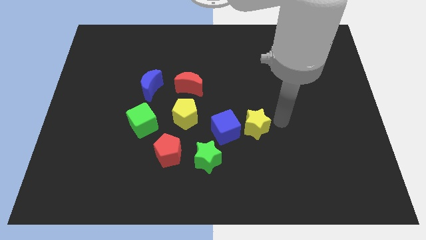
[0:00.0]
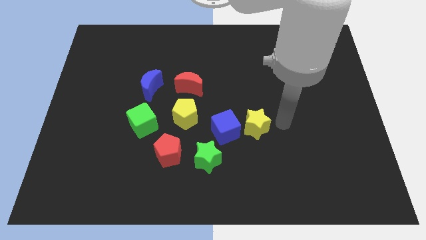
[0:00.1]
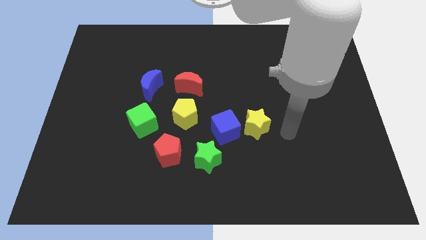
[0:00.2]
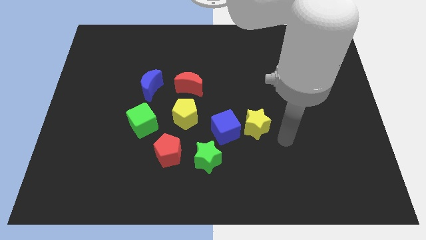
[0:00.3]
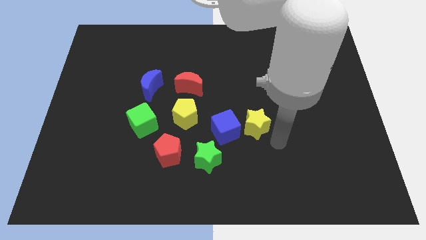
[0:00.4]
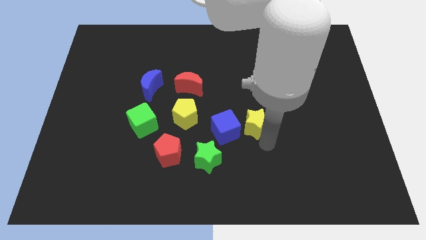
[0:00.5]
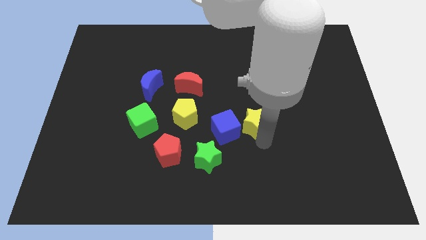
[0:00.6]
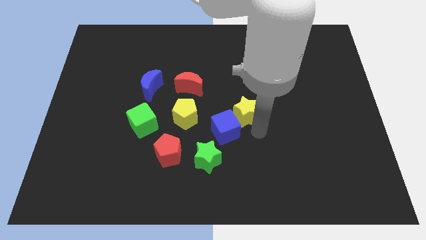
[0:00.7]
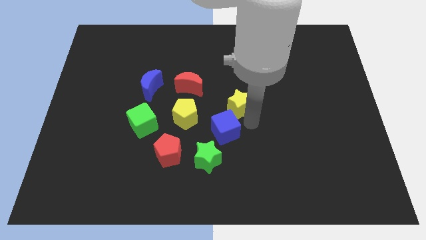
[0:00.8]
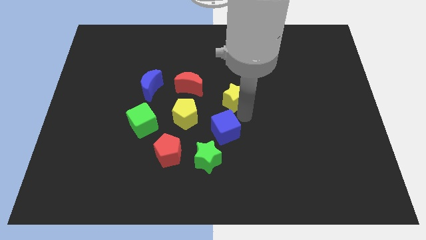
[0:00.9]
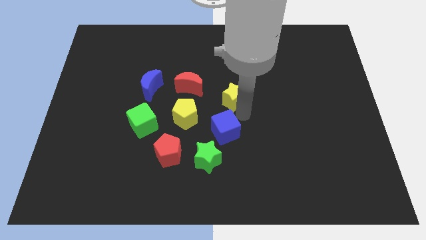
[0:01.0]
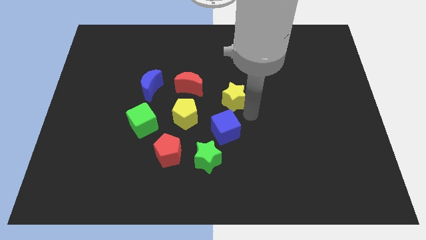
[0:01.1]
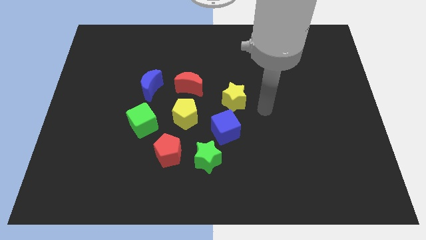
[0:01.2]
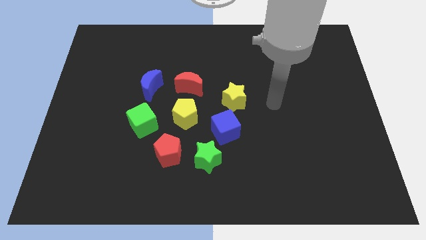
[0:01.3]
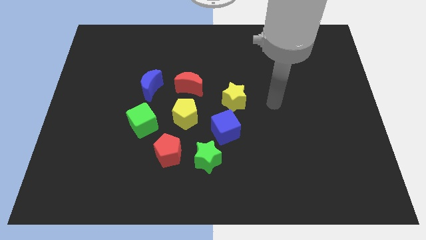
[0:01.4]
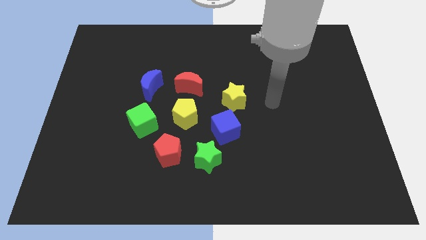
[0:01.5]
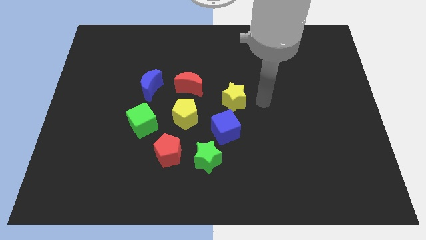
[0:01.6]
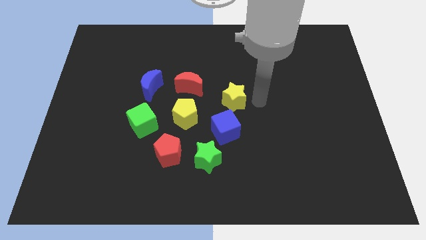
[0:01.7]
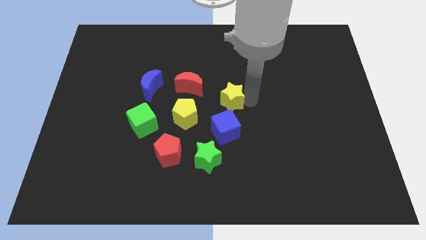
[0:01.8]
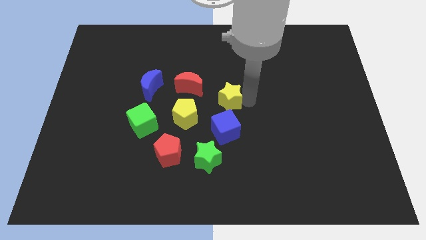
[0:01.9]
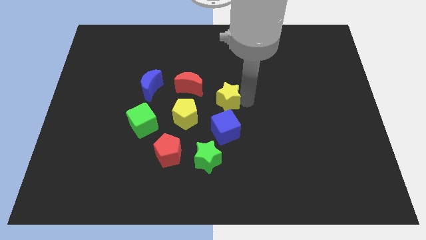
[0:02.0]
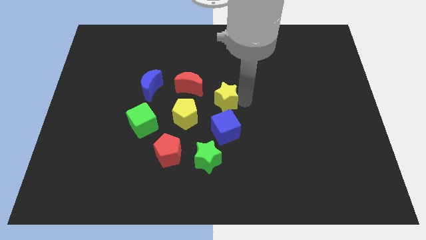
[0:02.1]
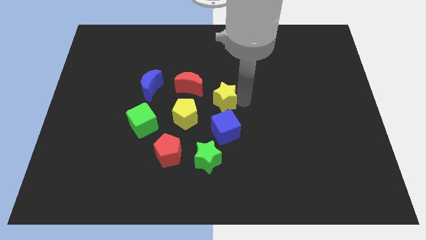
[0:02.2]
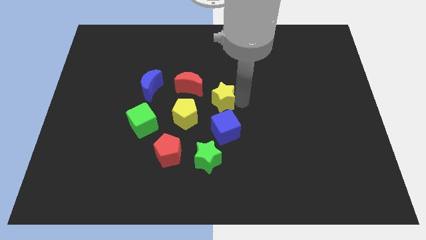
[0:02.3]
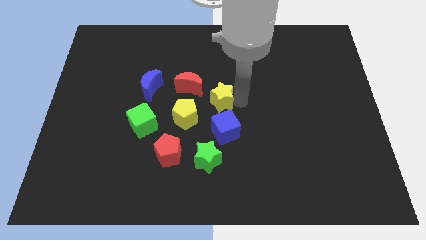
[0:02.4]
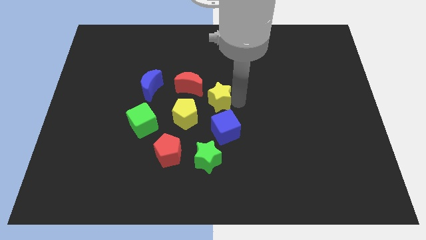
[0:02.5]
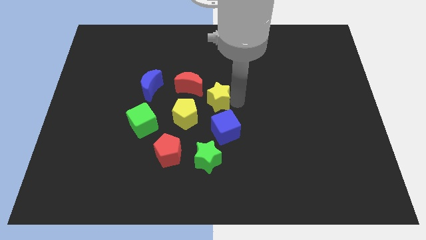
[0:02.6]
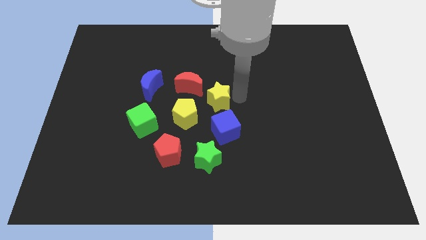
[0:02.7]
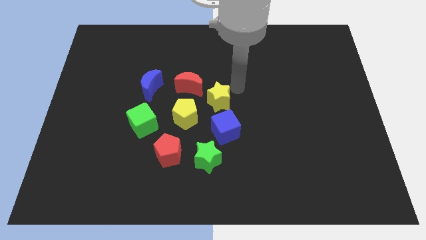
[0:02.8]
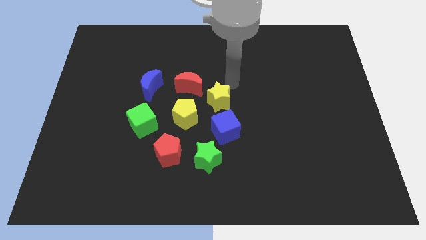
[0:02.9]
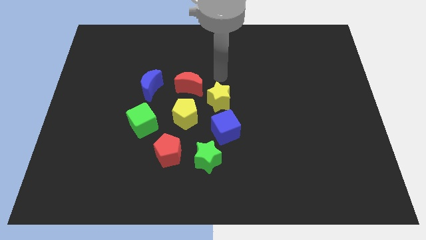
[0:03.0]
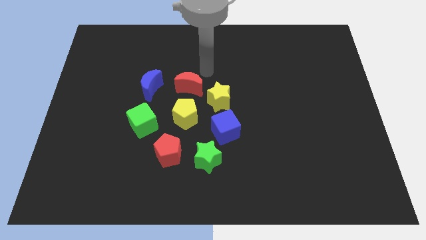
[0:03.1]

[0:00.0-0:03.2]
place the yellow star diagonally top right to yellow penatgon

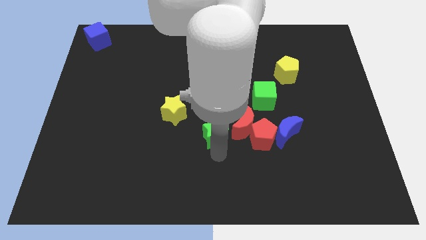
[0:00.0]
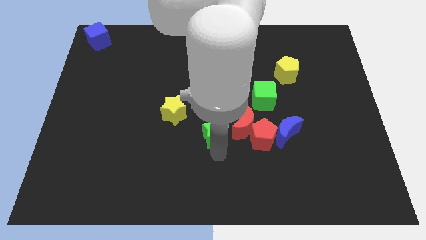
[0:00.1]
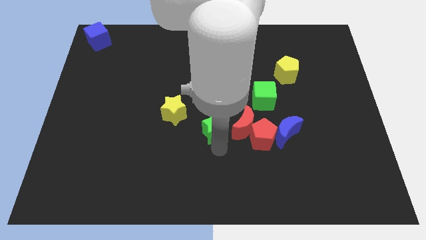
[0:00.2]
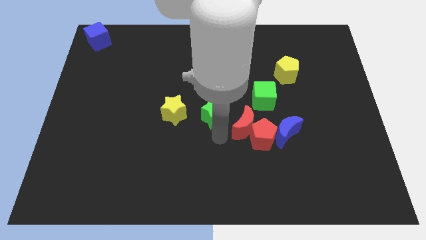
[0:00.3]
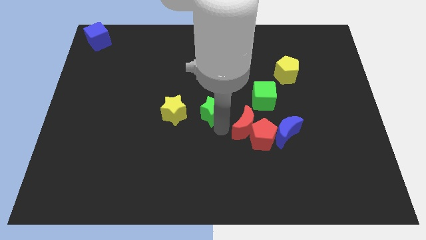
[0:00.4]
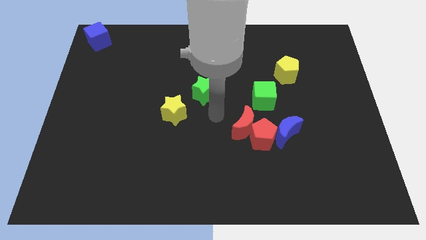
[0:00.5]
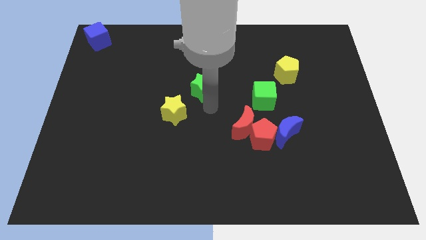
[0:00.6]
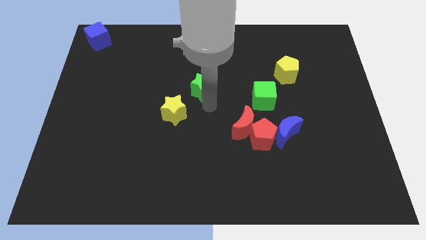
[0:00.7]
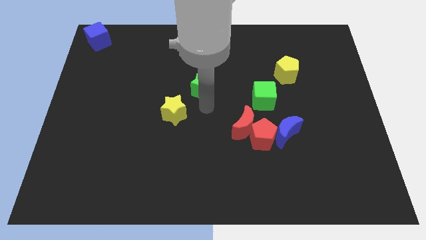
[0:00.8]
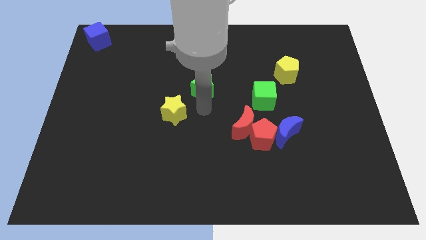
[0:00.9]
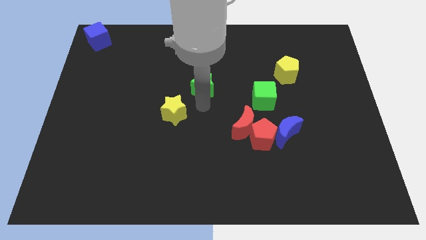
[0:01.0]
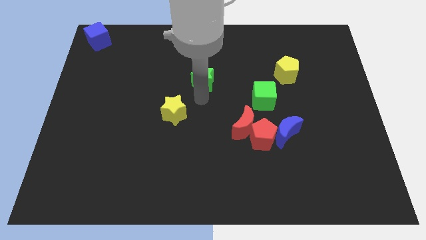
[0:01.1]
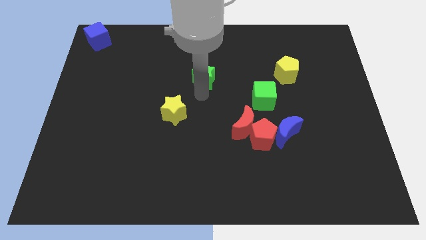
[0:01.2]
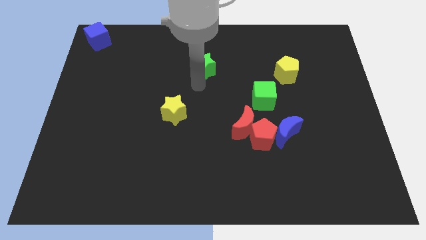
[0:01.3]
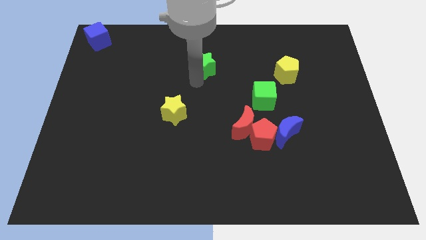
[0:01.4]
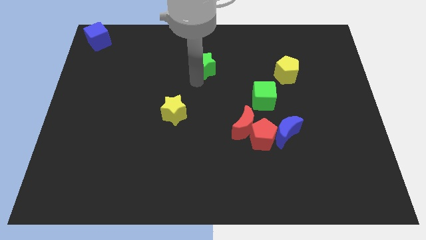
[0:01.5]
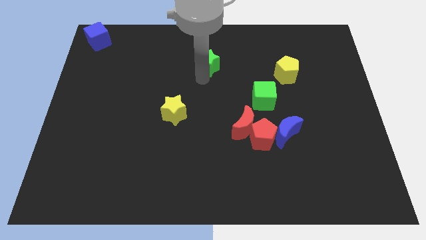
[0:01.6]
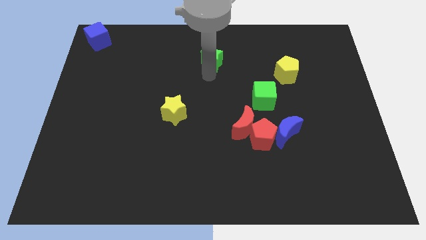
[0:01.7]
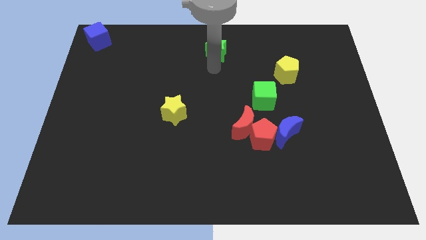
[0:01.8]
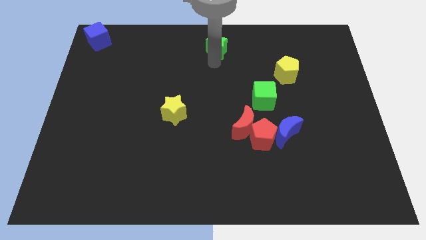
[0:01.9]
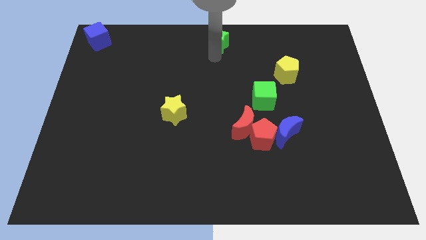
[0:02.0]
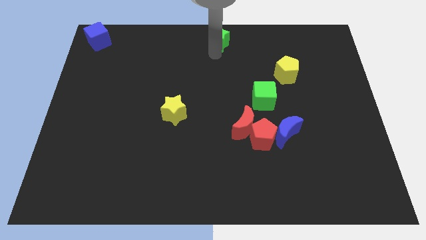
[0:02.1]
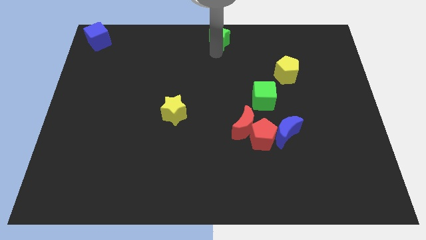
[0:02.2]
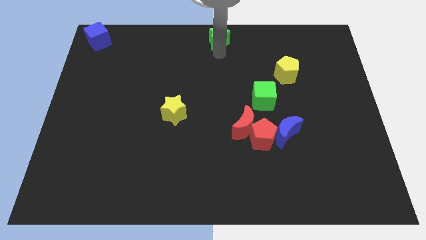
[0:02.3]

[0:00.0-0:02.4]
slide the green star to the top center

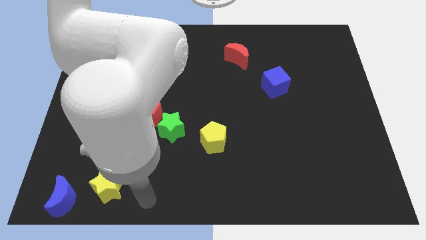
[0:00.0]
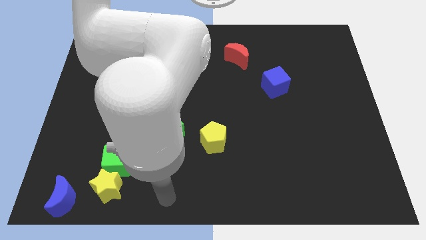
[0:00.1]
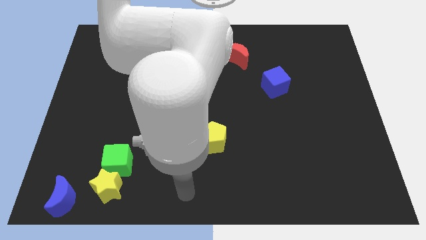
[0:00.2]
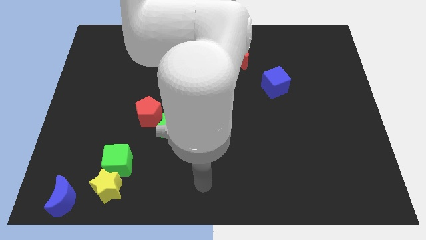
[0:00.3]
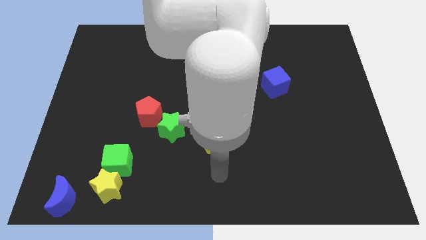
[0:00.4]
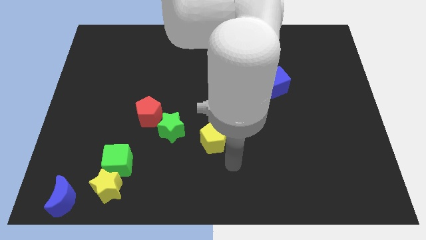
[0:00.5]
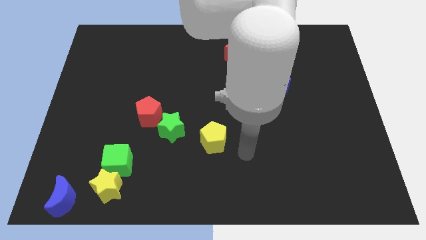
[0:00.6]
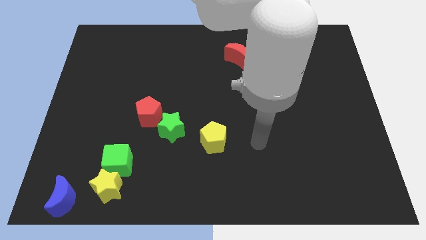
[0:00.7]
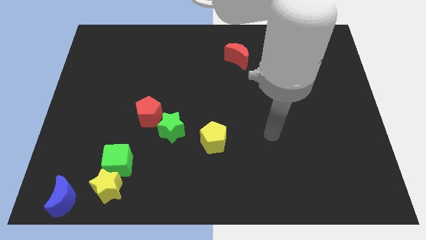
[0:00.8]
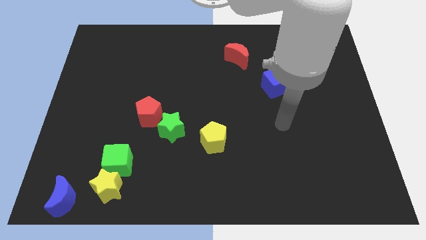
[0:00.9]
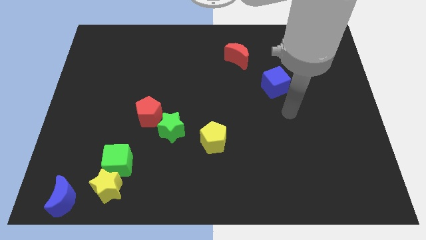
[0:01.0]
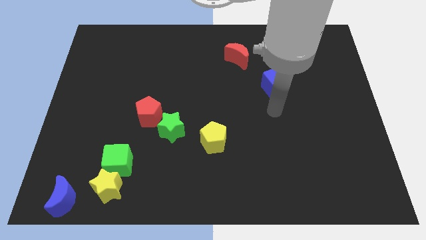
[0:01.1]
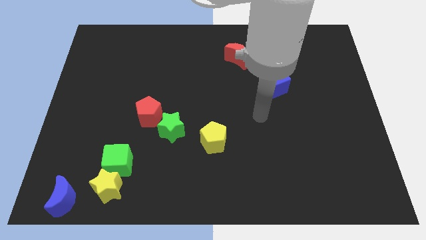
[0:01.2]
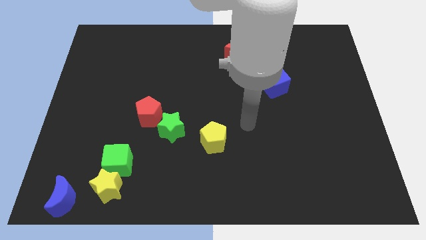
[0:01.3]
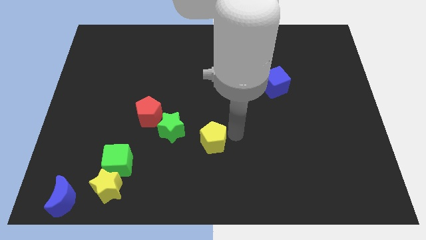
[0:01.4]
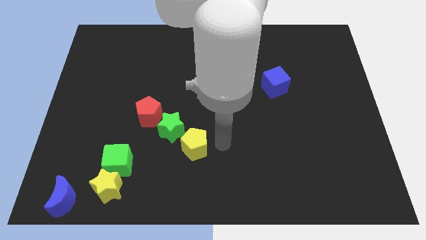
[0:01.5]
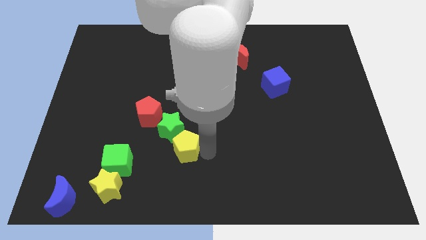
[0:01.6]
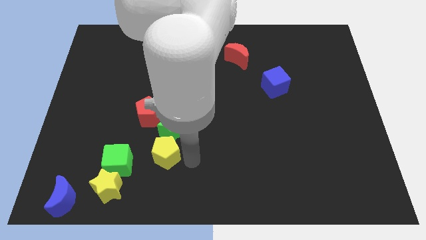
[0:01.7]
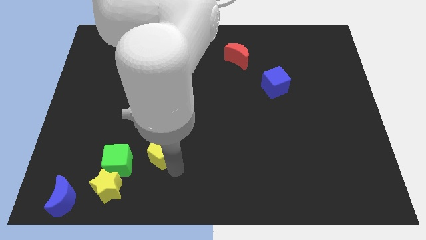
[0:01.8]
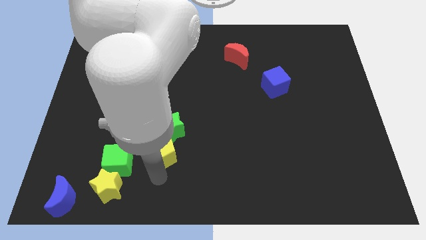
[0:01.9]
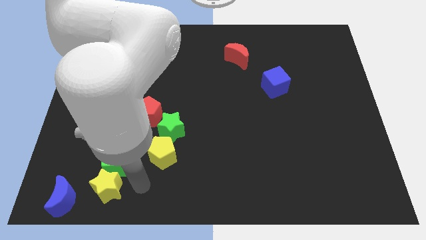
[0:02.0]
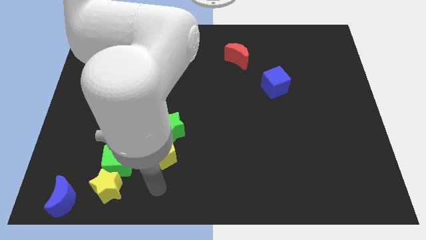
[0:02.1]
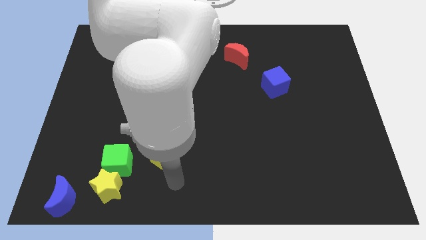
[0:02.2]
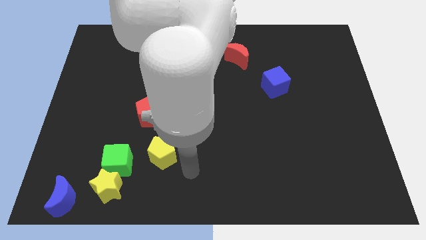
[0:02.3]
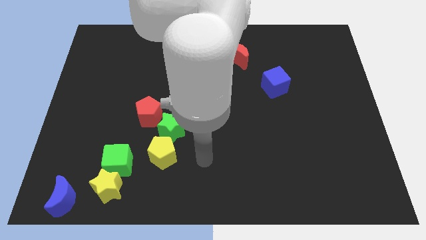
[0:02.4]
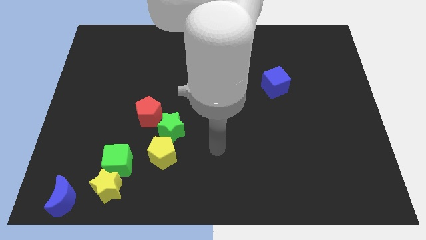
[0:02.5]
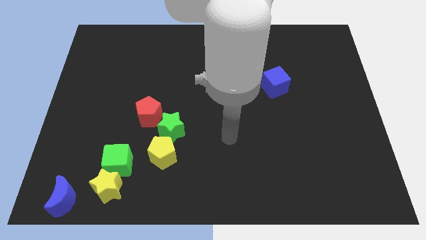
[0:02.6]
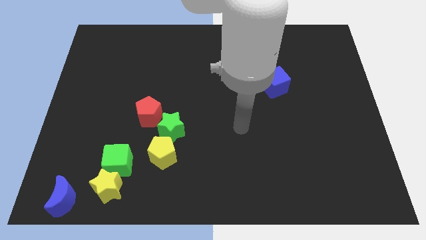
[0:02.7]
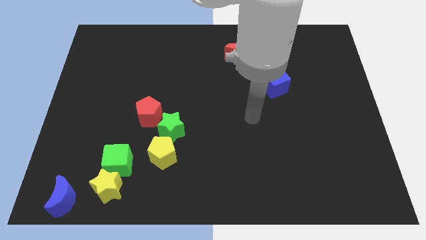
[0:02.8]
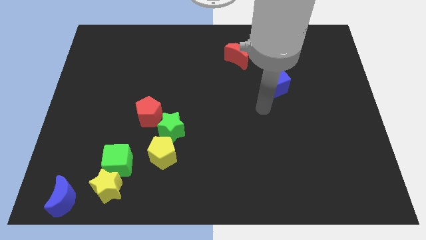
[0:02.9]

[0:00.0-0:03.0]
place yellow pentagon to the right of green cube

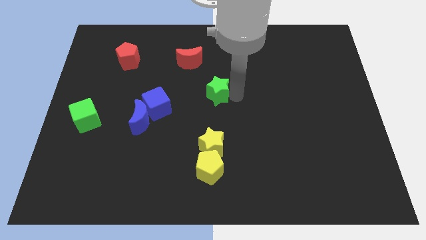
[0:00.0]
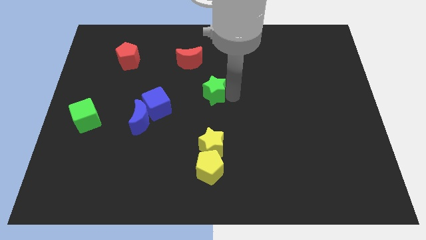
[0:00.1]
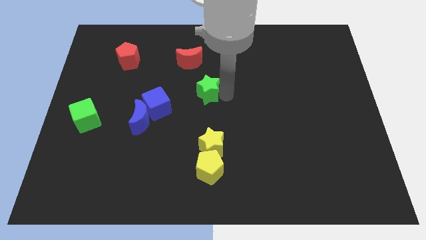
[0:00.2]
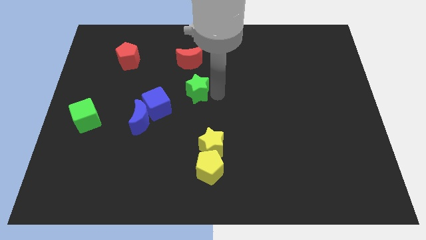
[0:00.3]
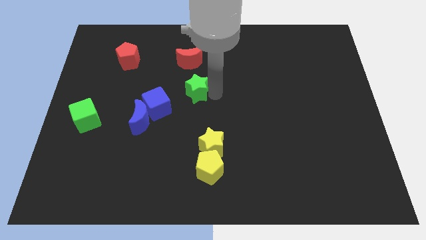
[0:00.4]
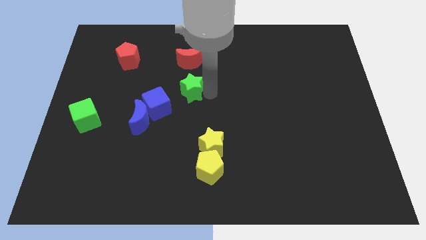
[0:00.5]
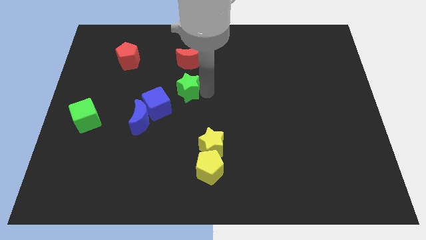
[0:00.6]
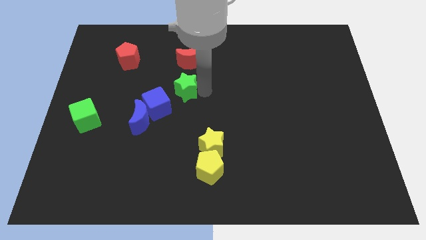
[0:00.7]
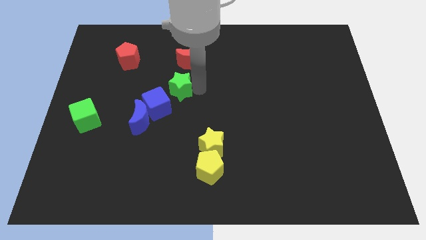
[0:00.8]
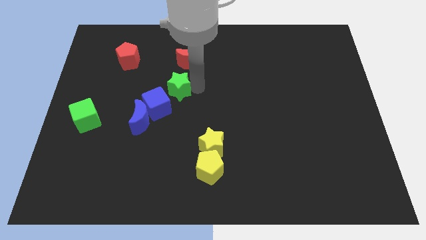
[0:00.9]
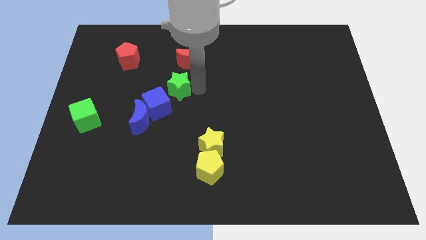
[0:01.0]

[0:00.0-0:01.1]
move the green star to the top right side of the blue cube
